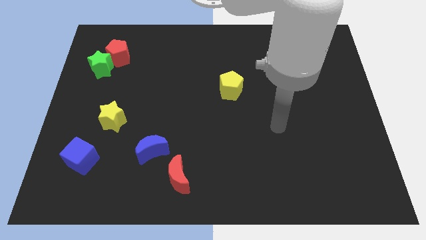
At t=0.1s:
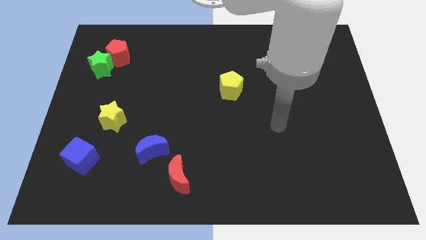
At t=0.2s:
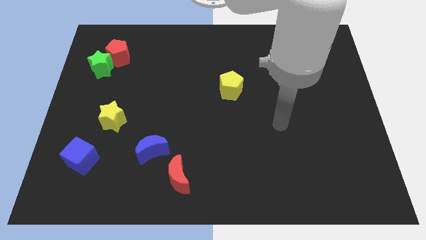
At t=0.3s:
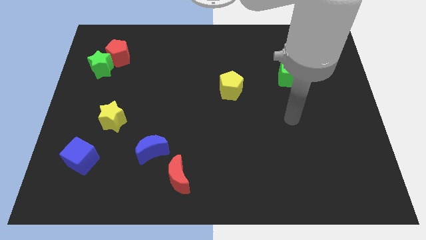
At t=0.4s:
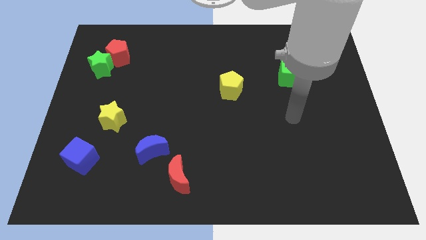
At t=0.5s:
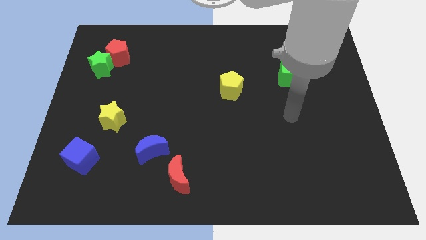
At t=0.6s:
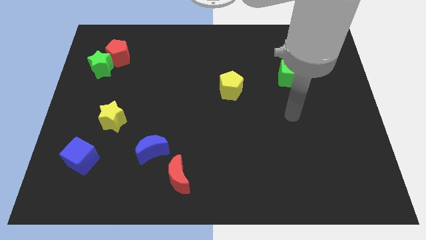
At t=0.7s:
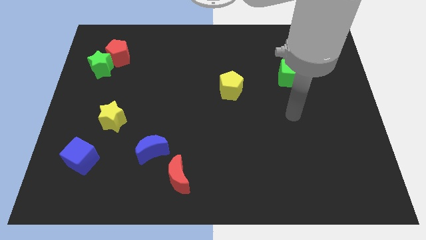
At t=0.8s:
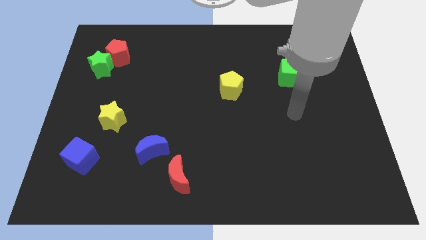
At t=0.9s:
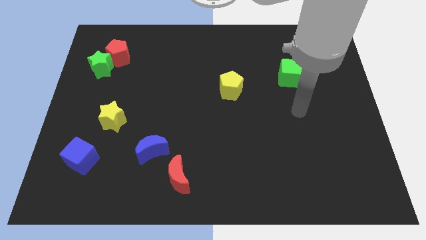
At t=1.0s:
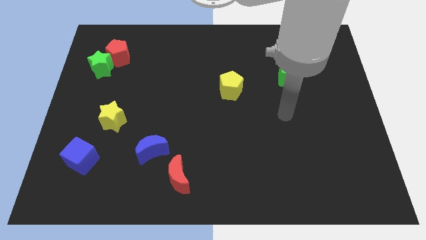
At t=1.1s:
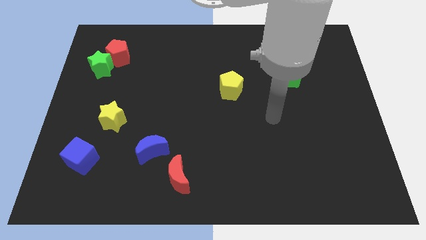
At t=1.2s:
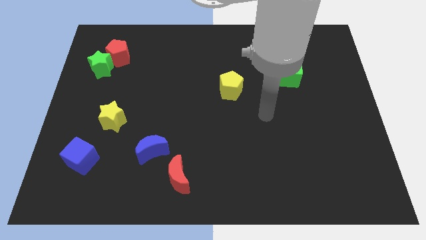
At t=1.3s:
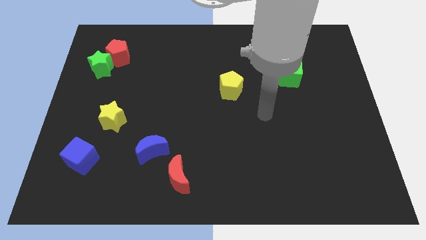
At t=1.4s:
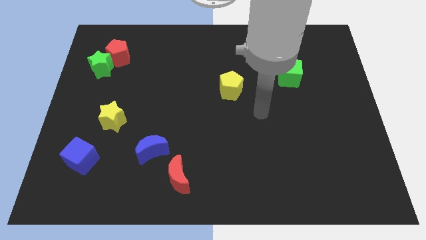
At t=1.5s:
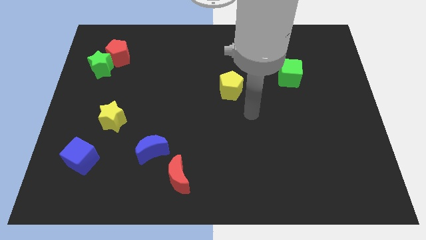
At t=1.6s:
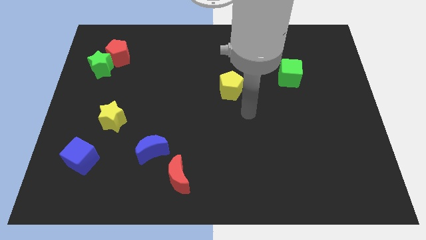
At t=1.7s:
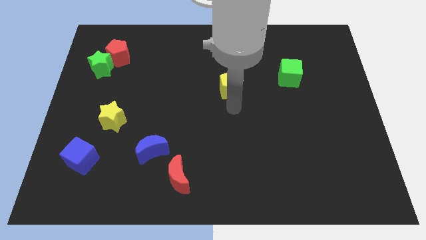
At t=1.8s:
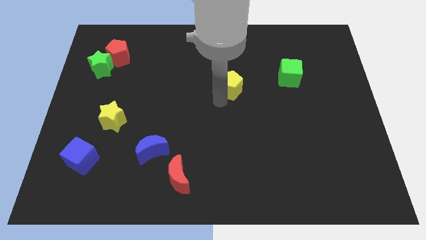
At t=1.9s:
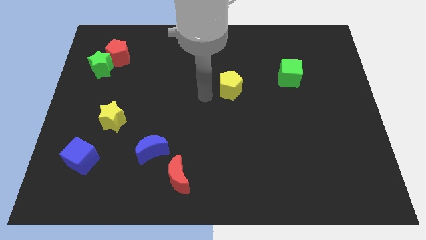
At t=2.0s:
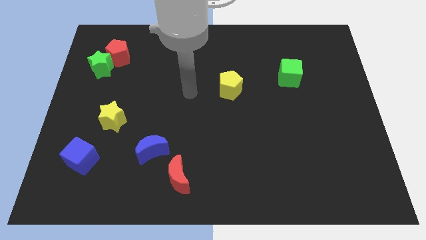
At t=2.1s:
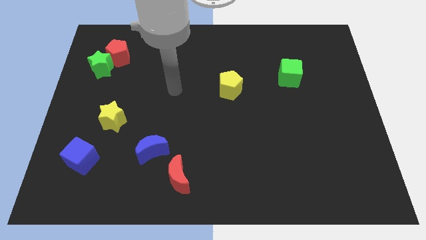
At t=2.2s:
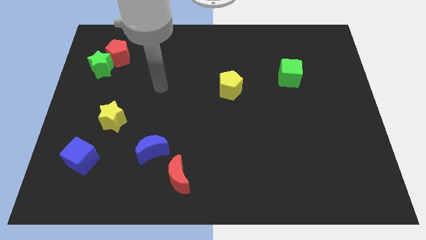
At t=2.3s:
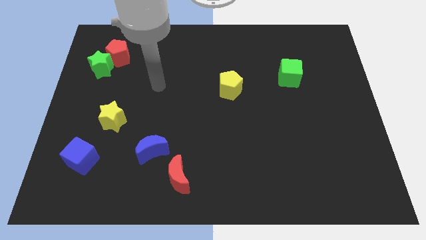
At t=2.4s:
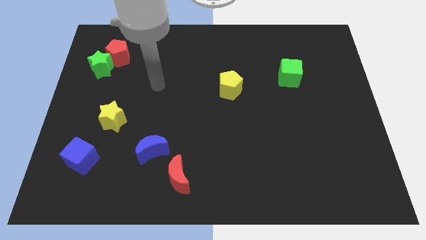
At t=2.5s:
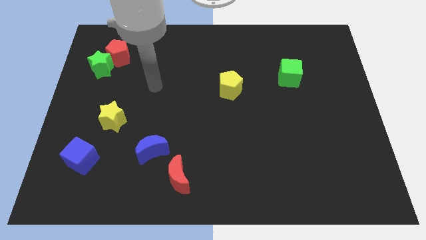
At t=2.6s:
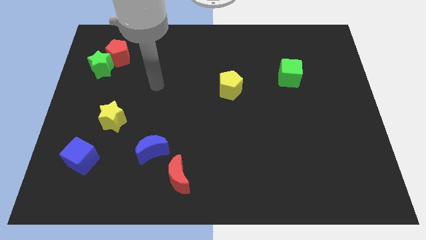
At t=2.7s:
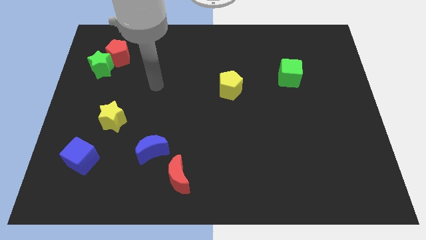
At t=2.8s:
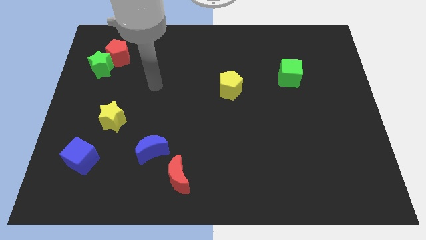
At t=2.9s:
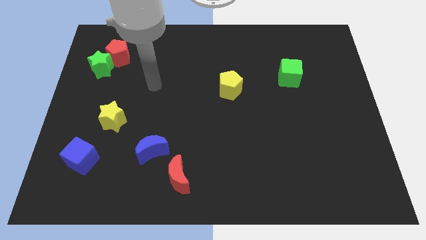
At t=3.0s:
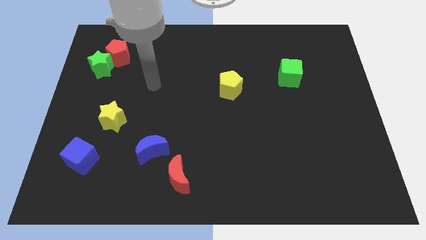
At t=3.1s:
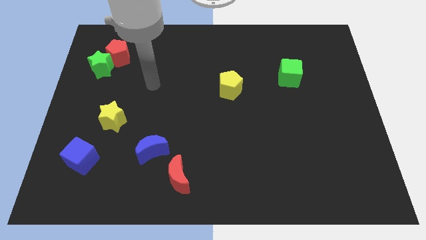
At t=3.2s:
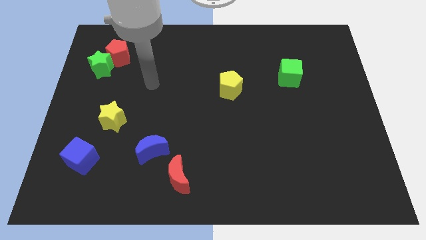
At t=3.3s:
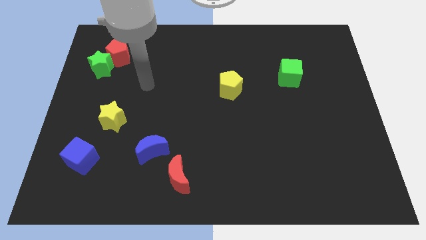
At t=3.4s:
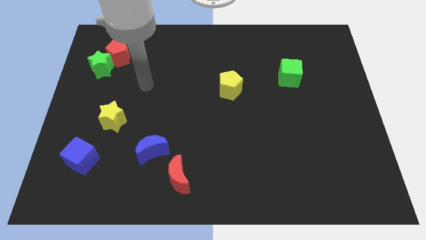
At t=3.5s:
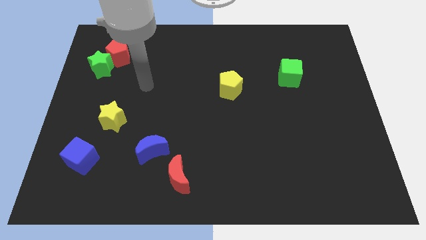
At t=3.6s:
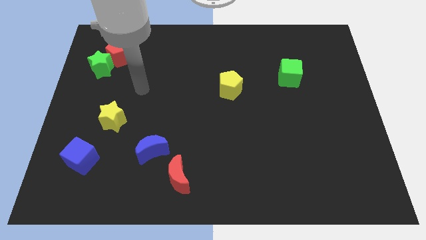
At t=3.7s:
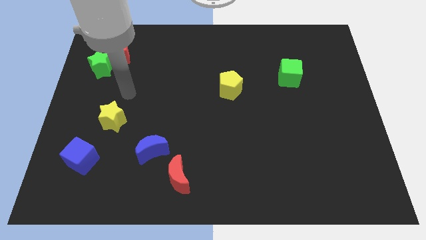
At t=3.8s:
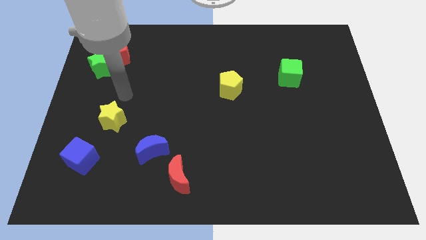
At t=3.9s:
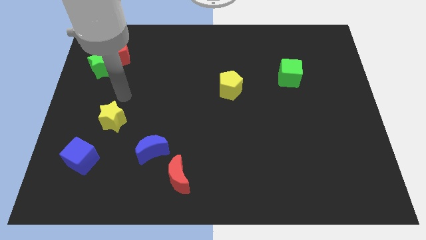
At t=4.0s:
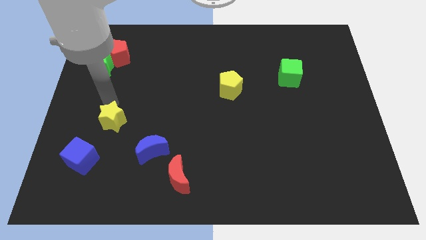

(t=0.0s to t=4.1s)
move your arm on top of the yellow star

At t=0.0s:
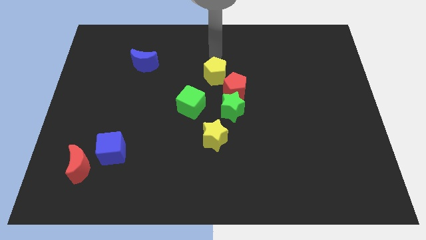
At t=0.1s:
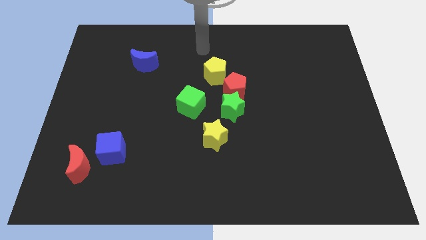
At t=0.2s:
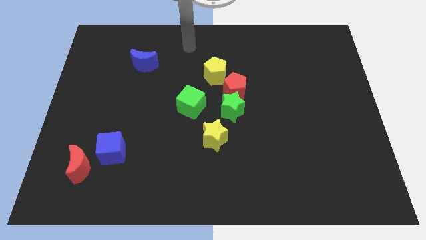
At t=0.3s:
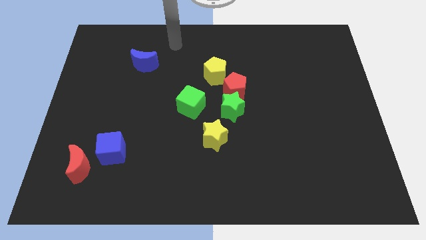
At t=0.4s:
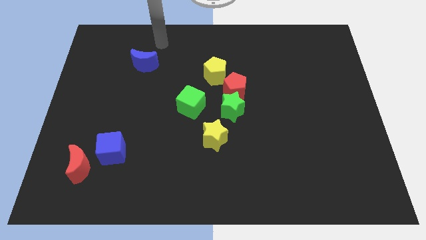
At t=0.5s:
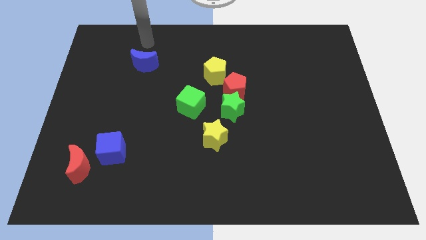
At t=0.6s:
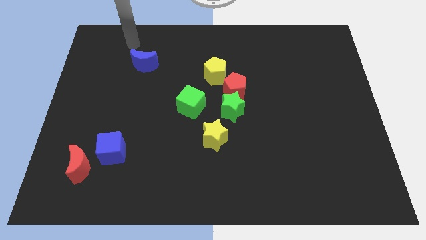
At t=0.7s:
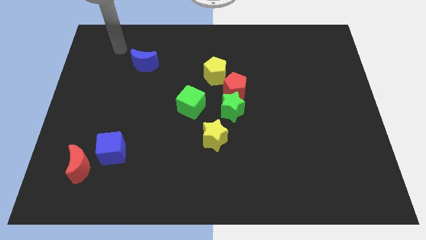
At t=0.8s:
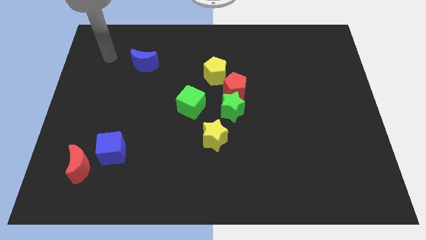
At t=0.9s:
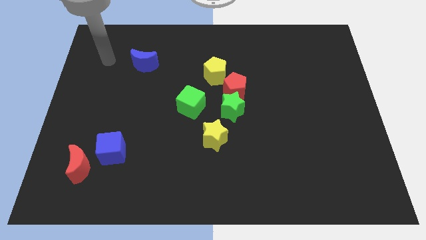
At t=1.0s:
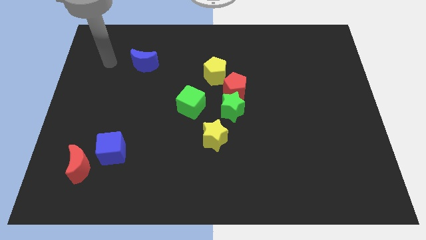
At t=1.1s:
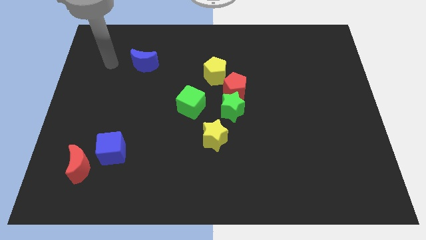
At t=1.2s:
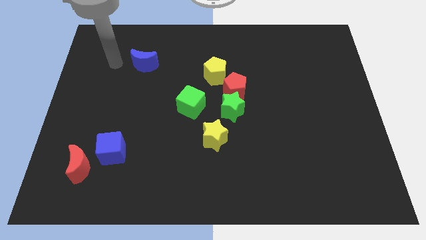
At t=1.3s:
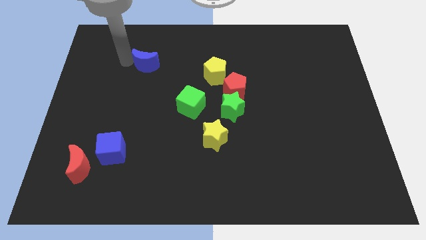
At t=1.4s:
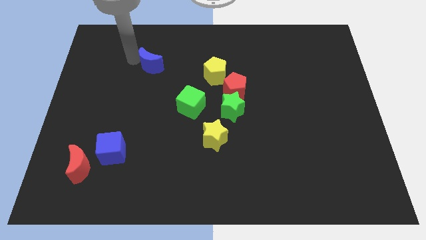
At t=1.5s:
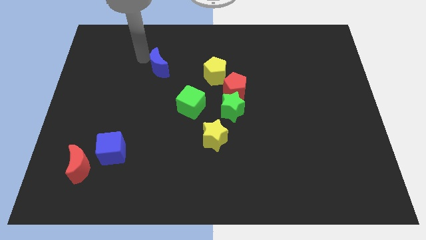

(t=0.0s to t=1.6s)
move the blue moon slightly to the right

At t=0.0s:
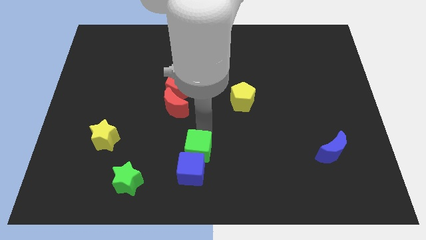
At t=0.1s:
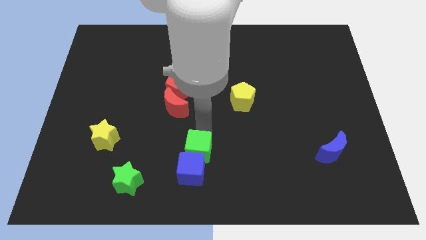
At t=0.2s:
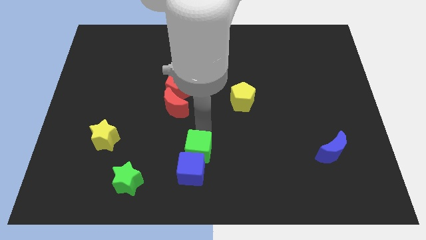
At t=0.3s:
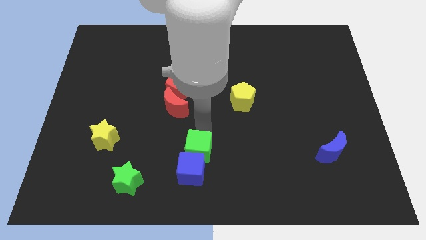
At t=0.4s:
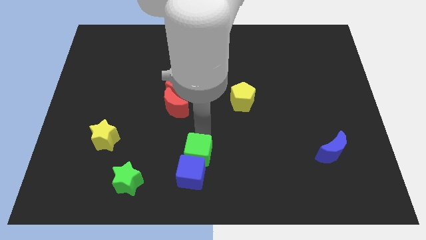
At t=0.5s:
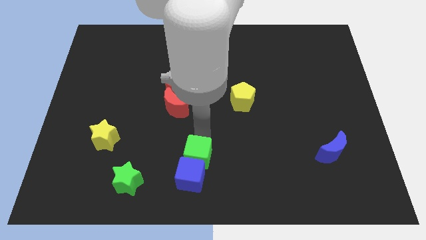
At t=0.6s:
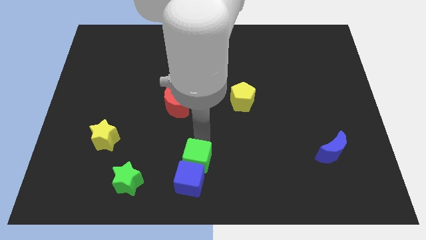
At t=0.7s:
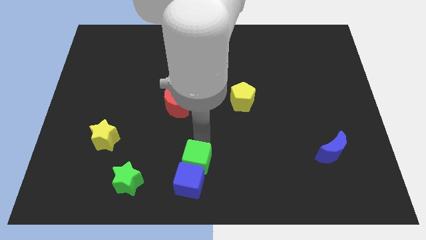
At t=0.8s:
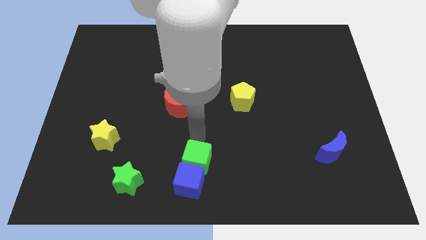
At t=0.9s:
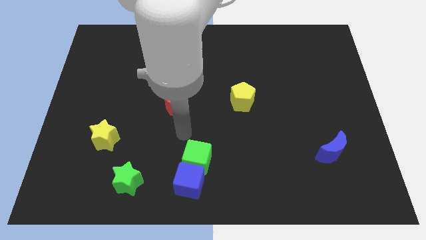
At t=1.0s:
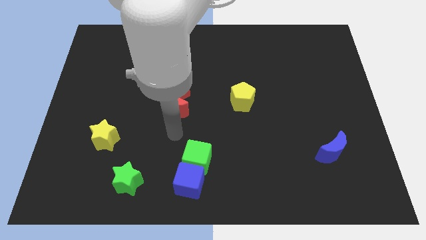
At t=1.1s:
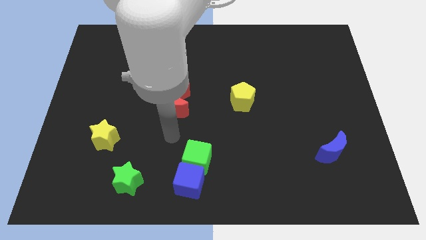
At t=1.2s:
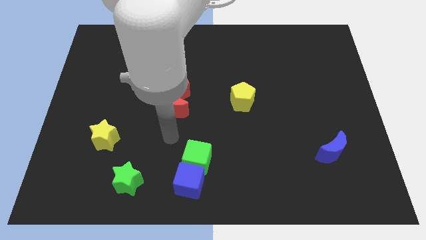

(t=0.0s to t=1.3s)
move the green and blue cube to the bottom center

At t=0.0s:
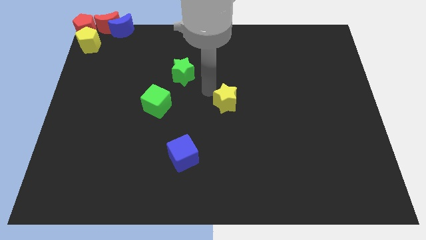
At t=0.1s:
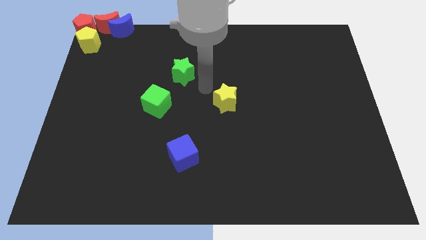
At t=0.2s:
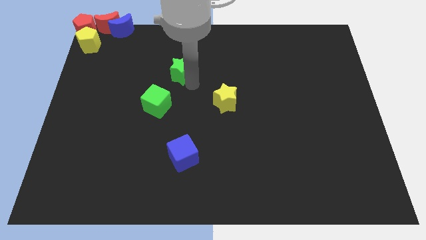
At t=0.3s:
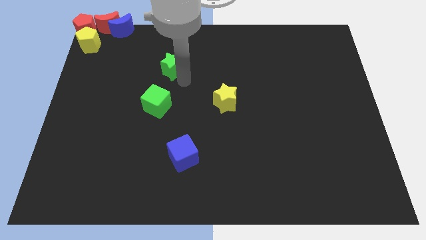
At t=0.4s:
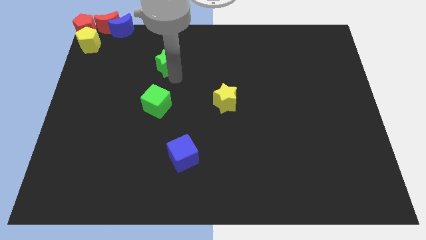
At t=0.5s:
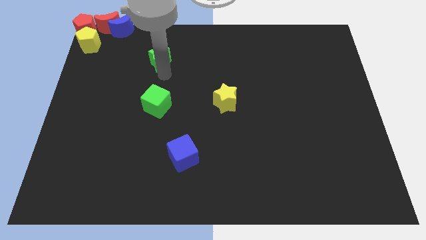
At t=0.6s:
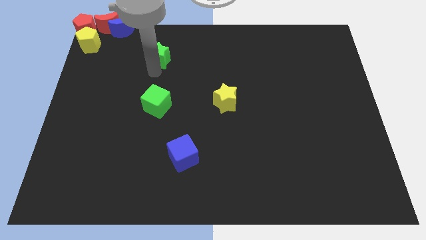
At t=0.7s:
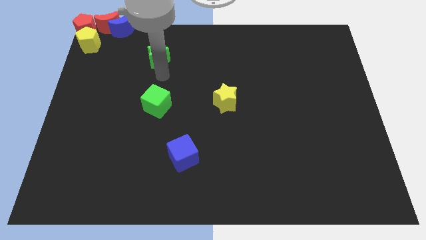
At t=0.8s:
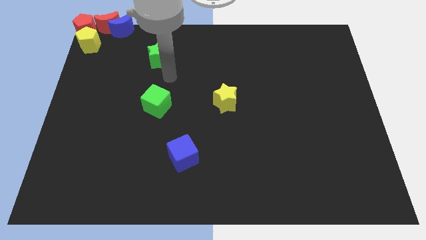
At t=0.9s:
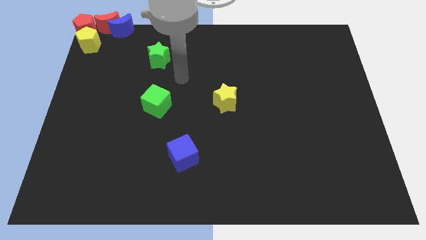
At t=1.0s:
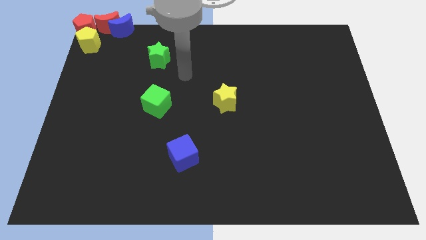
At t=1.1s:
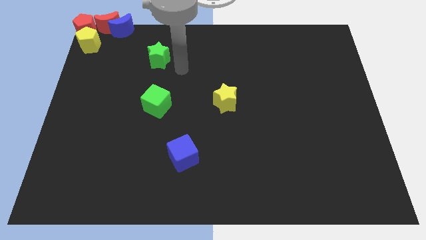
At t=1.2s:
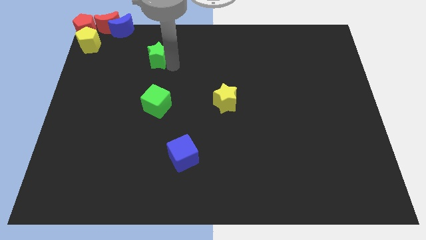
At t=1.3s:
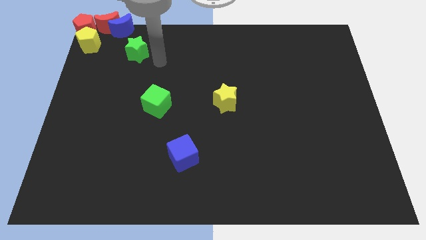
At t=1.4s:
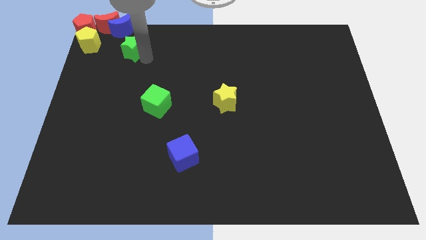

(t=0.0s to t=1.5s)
push the green to the left side of the board

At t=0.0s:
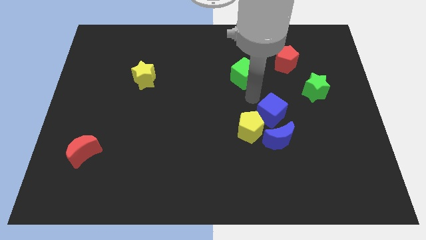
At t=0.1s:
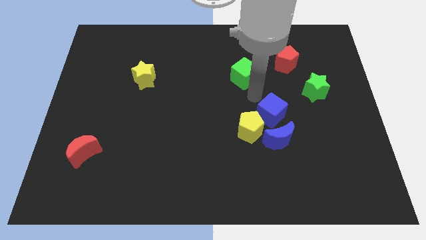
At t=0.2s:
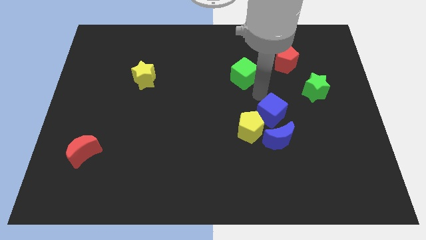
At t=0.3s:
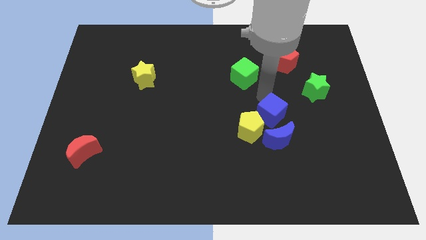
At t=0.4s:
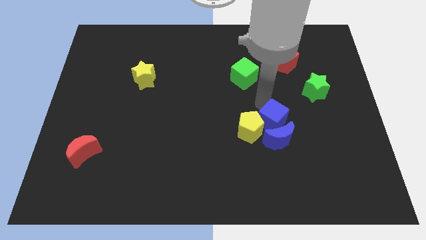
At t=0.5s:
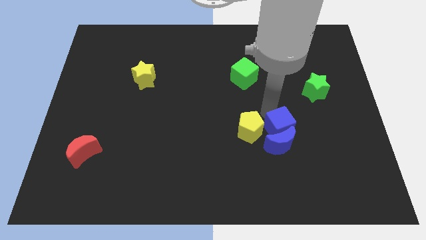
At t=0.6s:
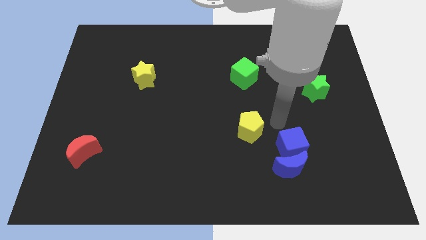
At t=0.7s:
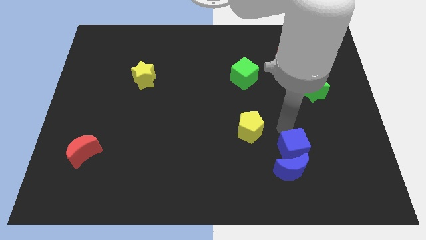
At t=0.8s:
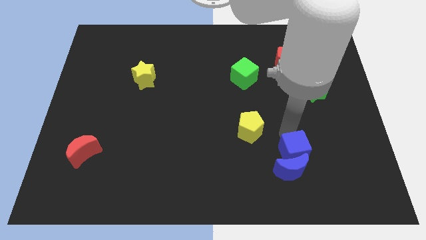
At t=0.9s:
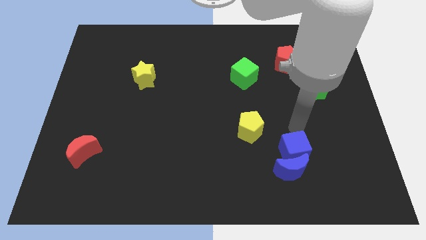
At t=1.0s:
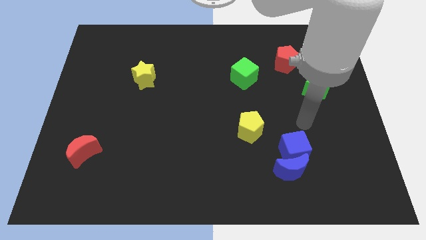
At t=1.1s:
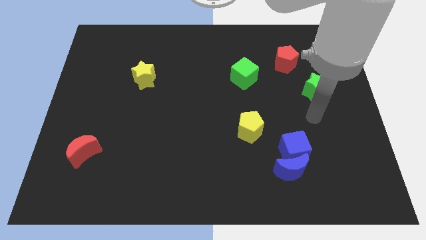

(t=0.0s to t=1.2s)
push the blue blocks towards the bottom side of the board
